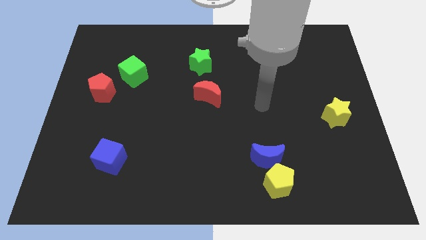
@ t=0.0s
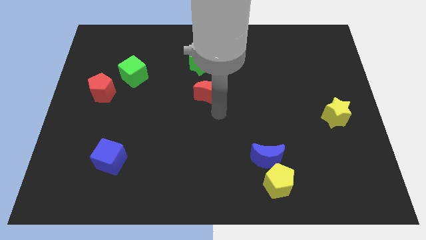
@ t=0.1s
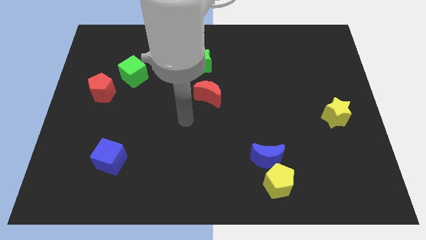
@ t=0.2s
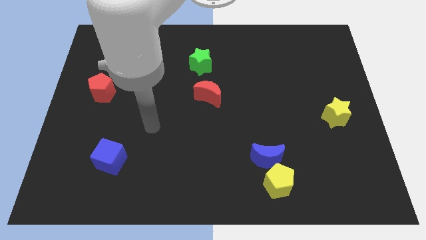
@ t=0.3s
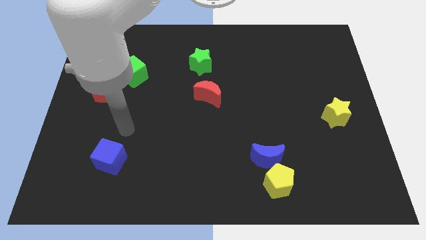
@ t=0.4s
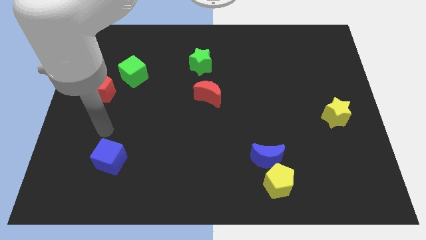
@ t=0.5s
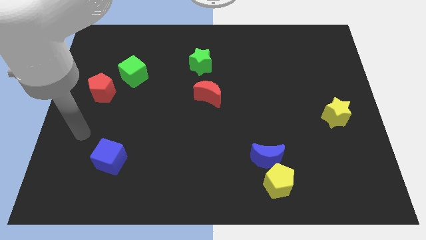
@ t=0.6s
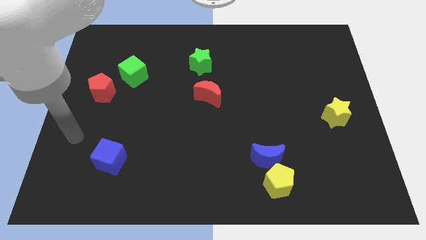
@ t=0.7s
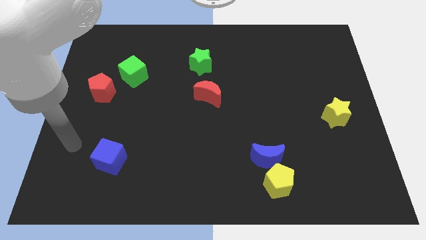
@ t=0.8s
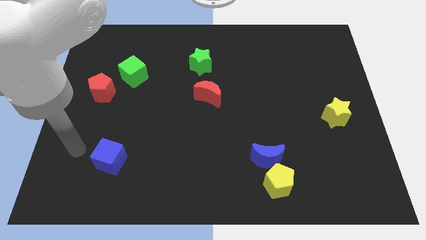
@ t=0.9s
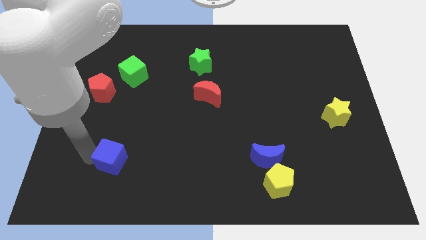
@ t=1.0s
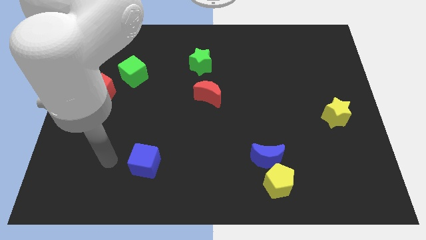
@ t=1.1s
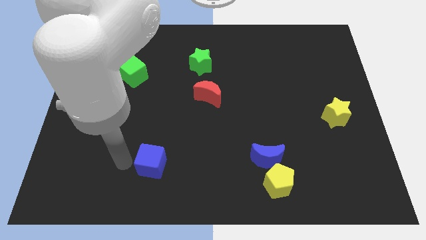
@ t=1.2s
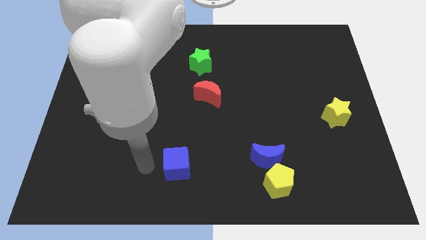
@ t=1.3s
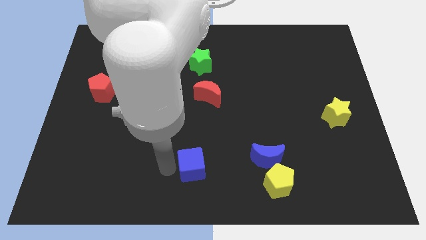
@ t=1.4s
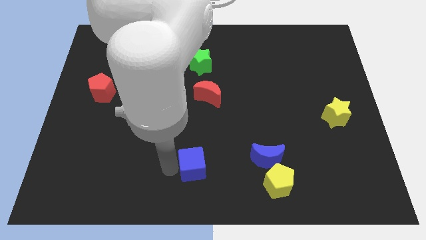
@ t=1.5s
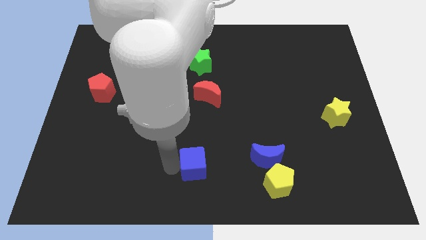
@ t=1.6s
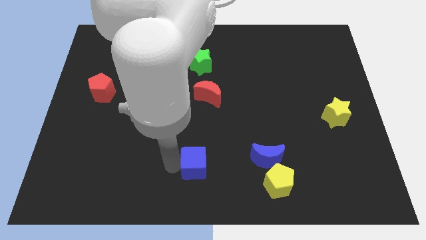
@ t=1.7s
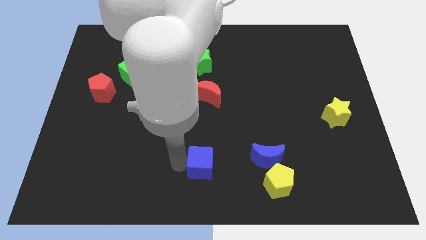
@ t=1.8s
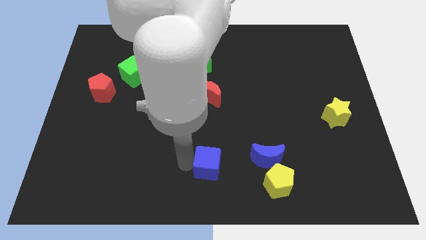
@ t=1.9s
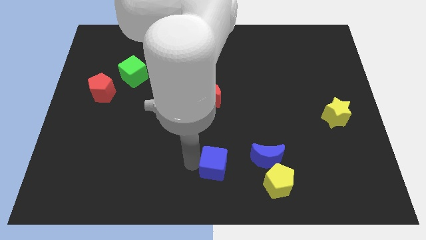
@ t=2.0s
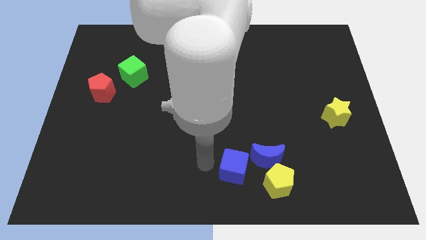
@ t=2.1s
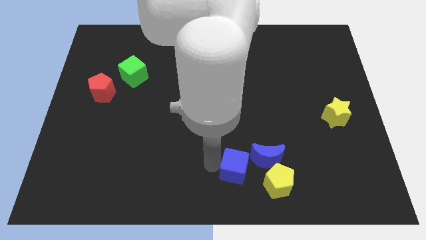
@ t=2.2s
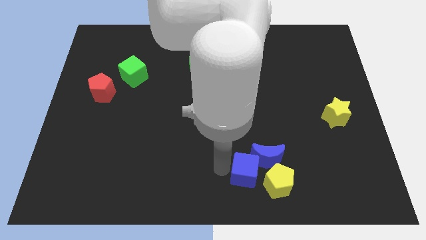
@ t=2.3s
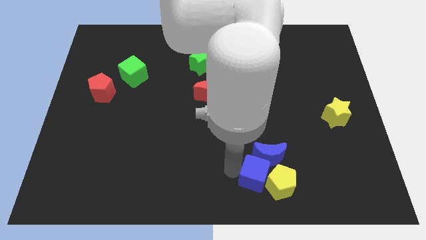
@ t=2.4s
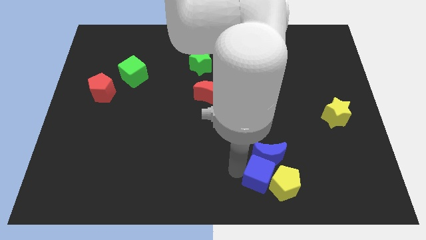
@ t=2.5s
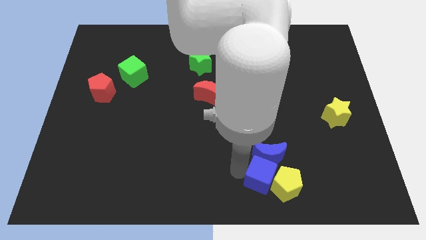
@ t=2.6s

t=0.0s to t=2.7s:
put the blue cube next to the yellow pentagon

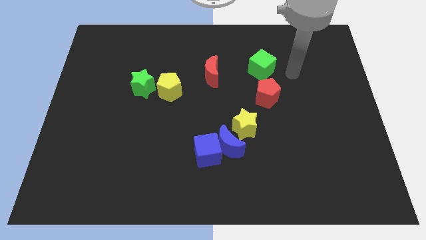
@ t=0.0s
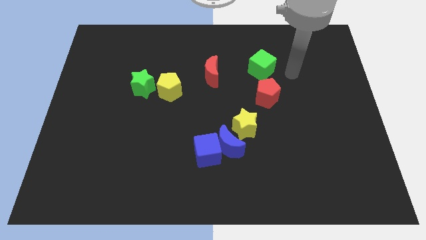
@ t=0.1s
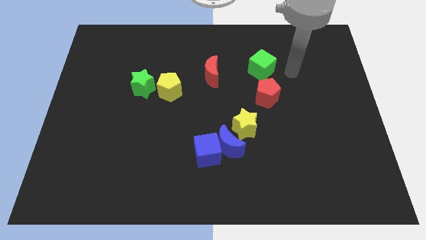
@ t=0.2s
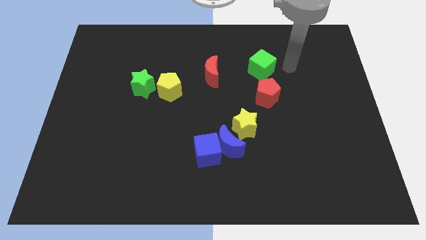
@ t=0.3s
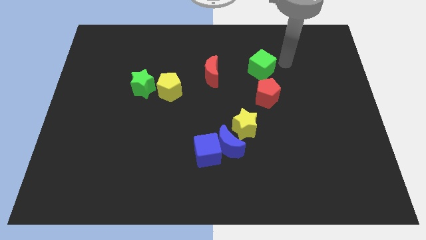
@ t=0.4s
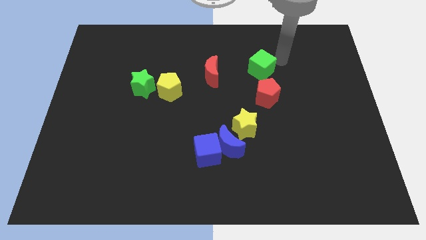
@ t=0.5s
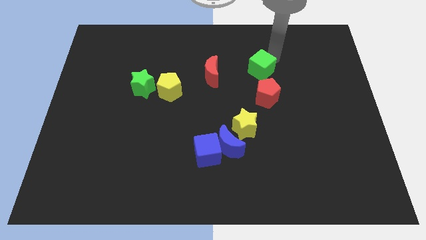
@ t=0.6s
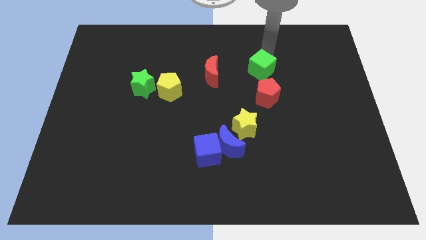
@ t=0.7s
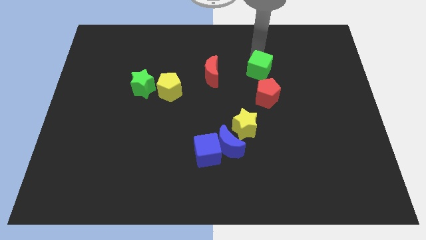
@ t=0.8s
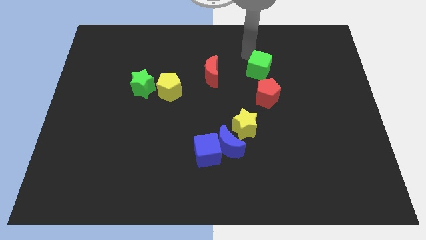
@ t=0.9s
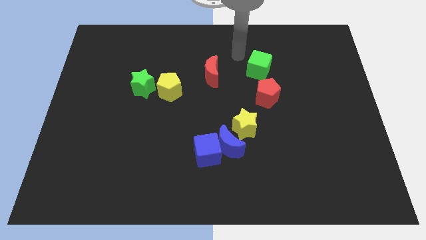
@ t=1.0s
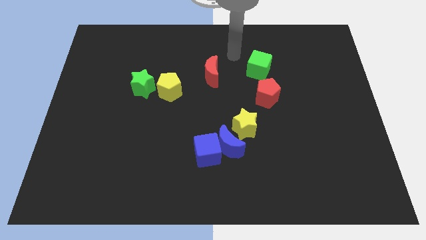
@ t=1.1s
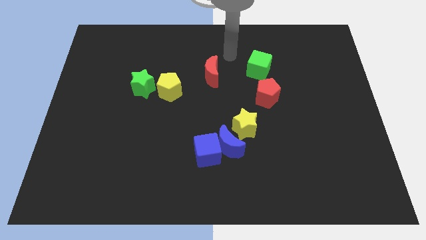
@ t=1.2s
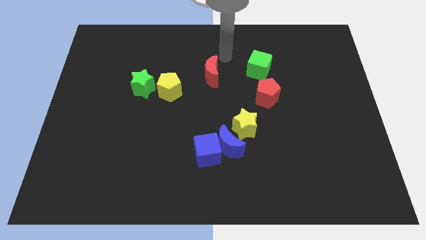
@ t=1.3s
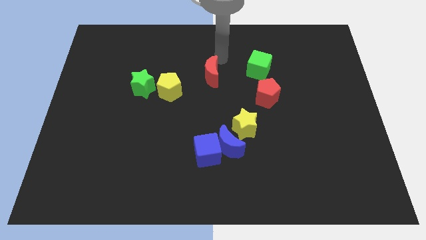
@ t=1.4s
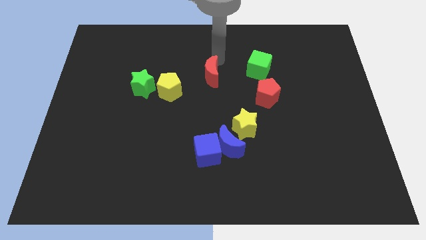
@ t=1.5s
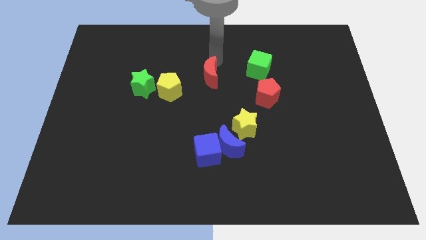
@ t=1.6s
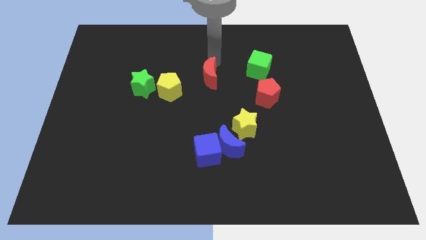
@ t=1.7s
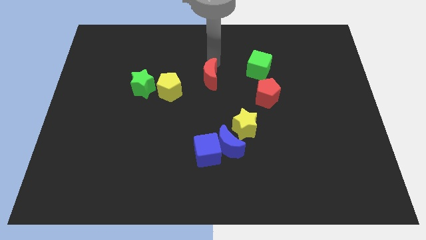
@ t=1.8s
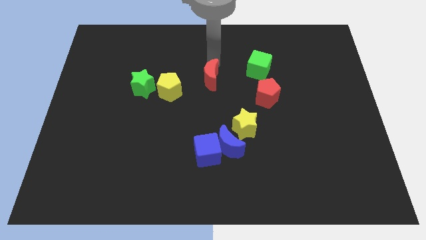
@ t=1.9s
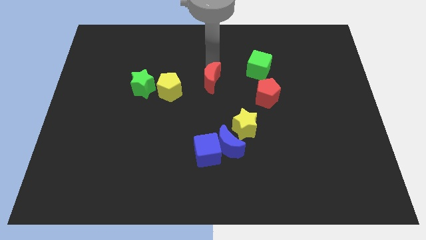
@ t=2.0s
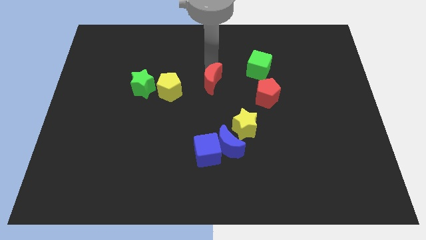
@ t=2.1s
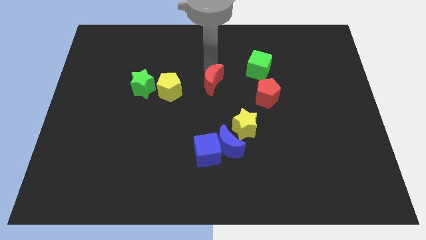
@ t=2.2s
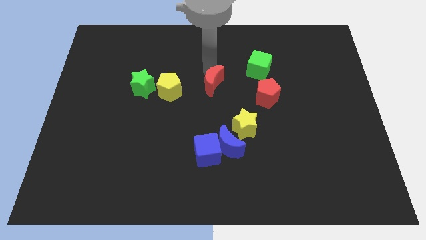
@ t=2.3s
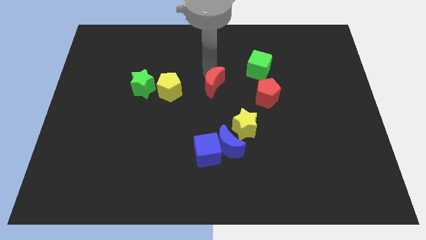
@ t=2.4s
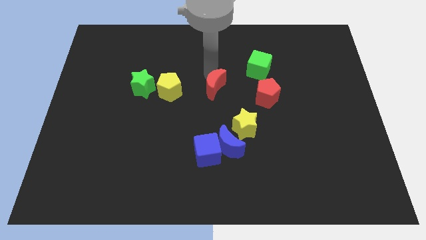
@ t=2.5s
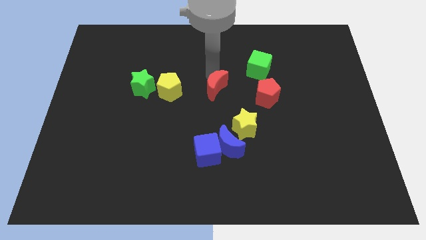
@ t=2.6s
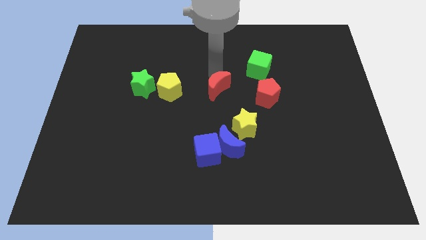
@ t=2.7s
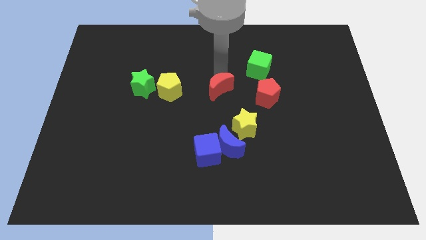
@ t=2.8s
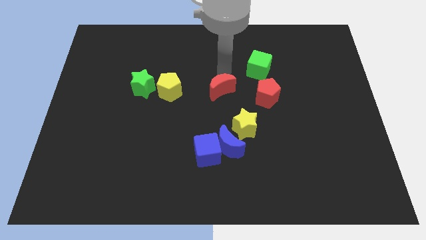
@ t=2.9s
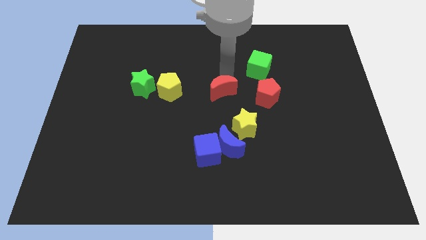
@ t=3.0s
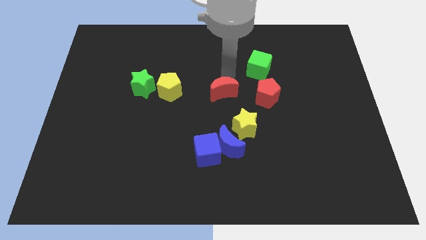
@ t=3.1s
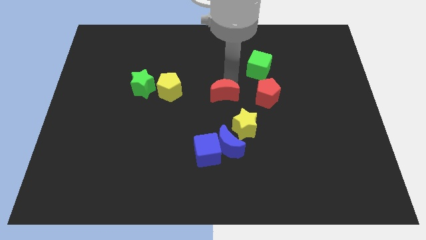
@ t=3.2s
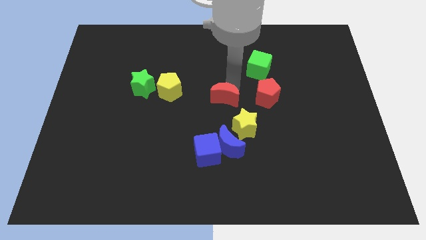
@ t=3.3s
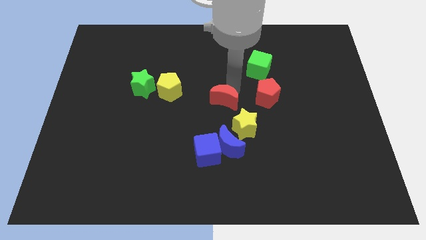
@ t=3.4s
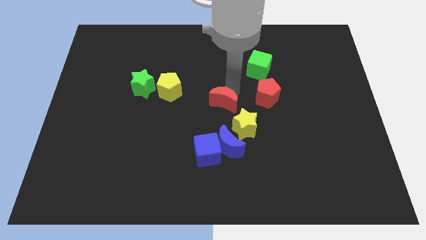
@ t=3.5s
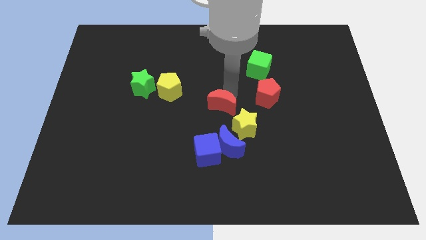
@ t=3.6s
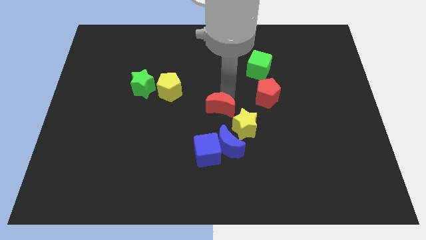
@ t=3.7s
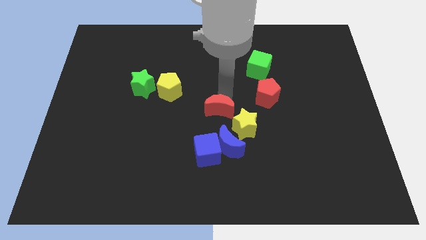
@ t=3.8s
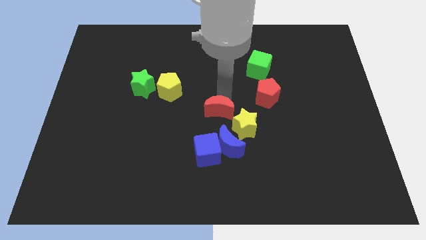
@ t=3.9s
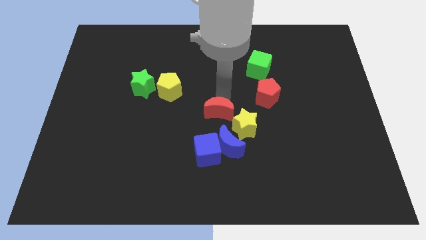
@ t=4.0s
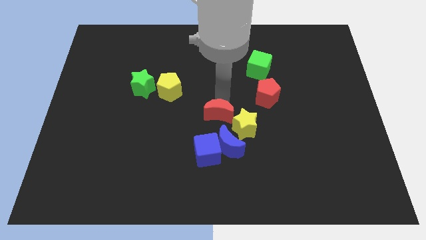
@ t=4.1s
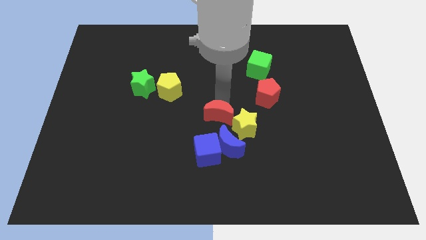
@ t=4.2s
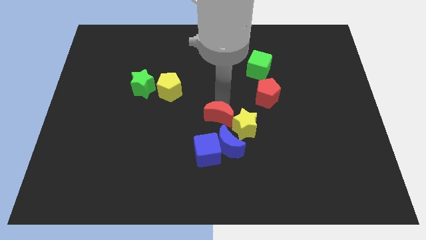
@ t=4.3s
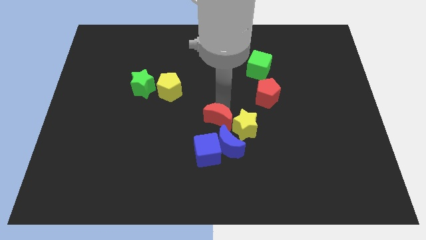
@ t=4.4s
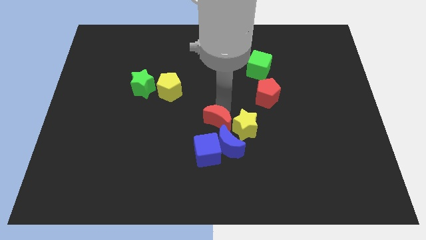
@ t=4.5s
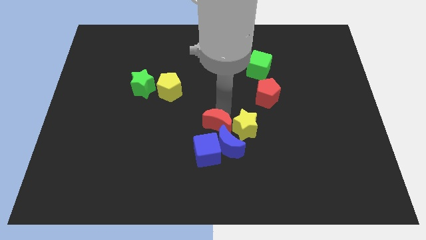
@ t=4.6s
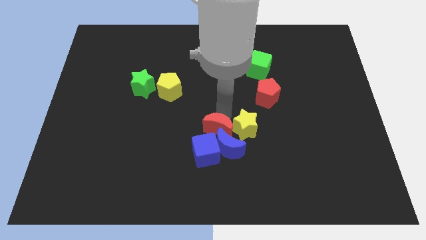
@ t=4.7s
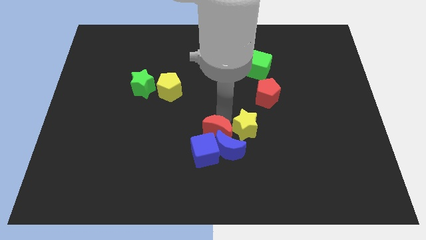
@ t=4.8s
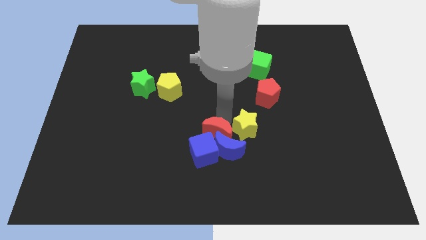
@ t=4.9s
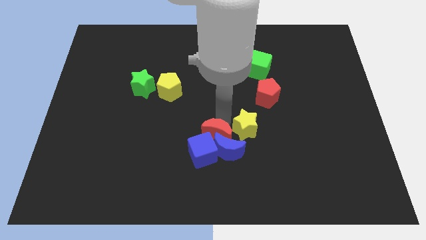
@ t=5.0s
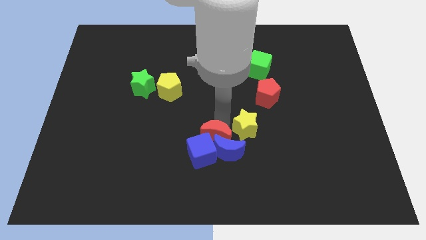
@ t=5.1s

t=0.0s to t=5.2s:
move the red moon next to the blue cube

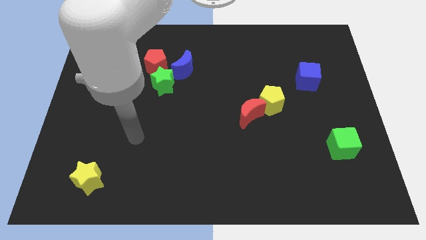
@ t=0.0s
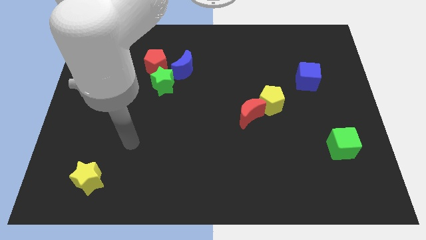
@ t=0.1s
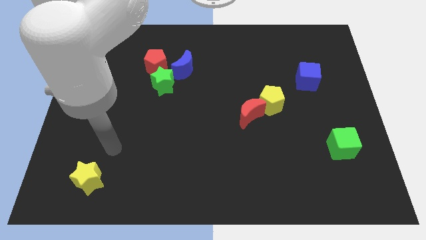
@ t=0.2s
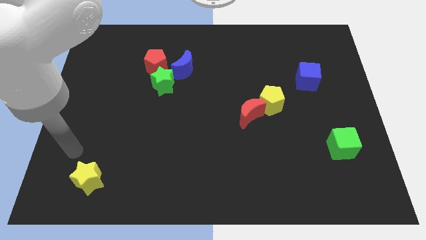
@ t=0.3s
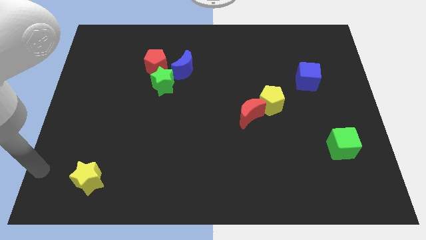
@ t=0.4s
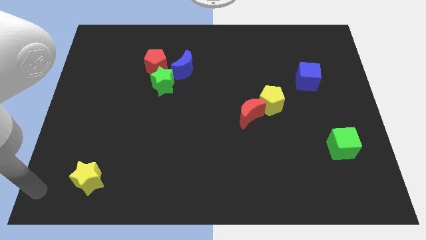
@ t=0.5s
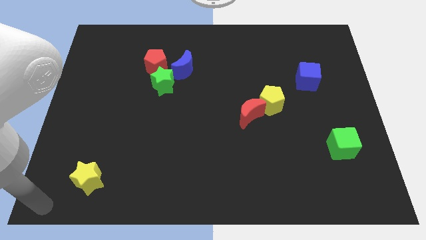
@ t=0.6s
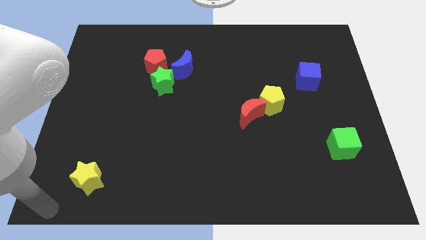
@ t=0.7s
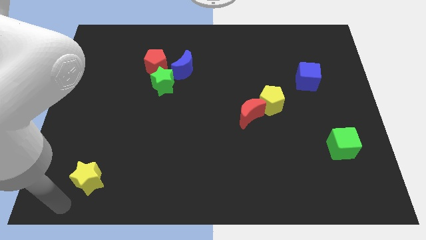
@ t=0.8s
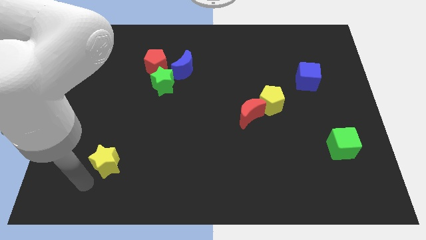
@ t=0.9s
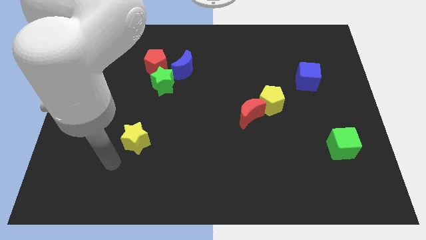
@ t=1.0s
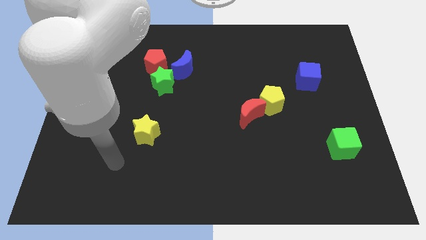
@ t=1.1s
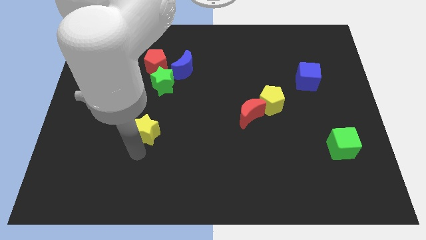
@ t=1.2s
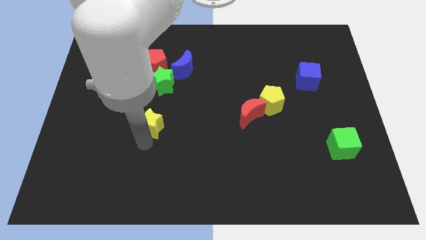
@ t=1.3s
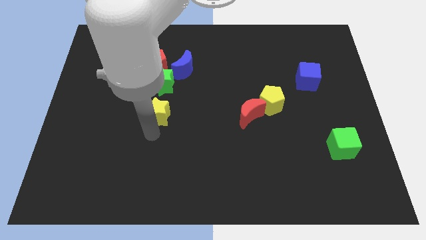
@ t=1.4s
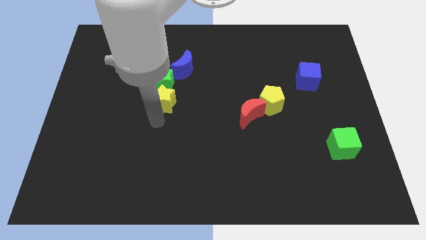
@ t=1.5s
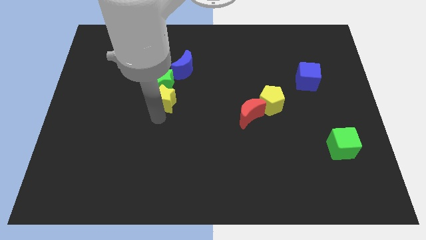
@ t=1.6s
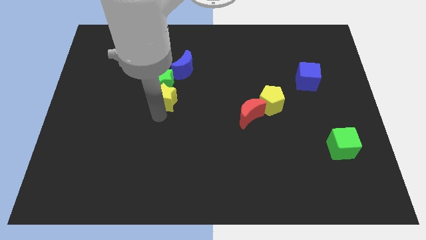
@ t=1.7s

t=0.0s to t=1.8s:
push the yellow star close to the green star
